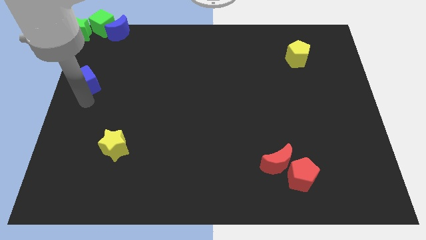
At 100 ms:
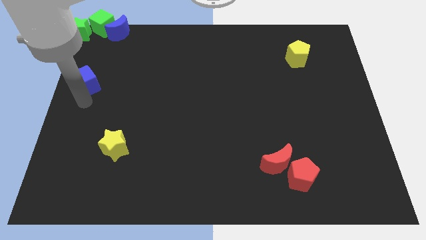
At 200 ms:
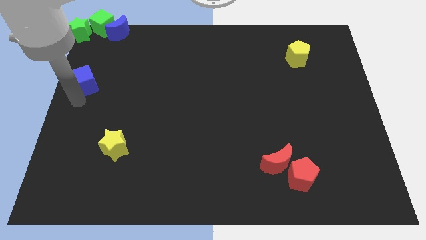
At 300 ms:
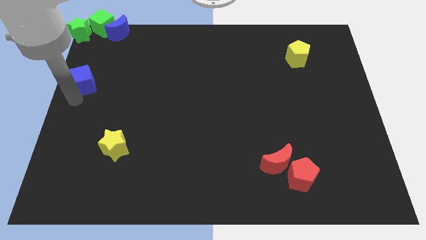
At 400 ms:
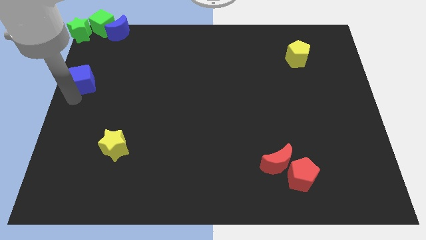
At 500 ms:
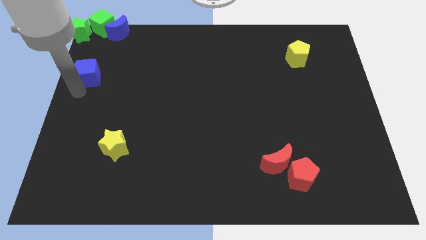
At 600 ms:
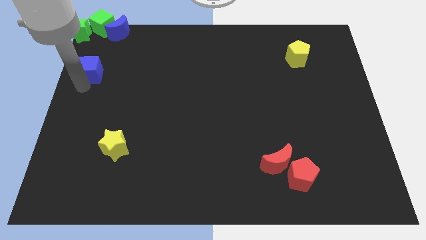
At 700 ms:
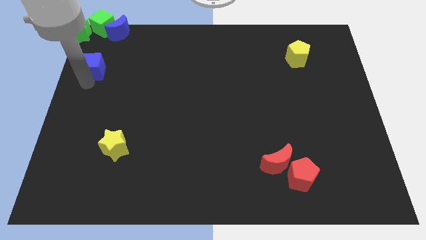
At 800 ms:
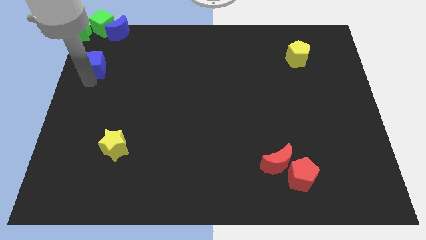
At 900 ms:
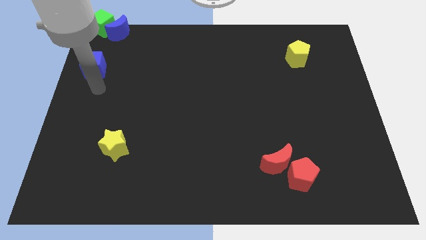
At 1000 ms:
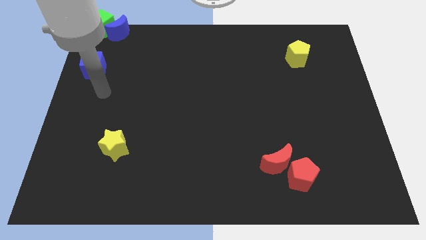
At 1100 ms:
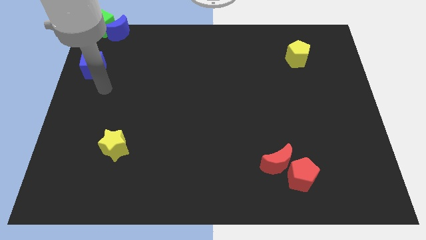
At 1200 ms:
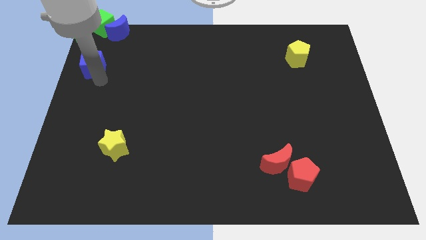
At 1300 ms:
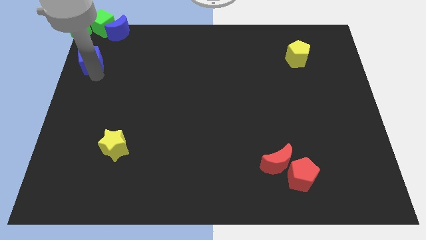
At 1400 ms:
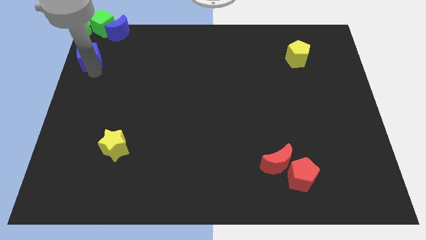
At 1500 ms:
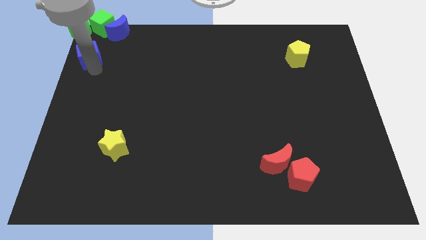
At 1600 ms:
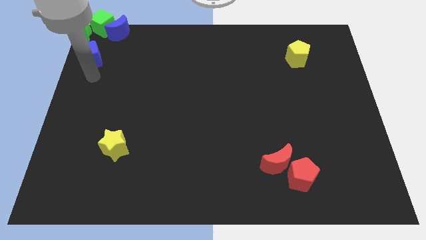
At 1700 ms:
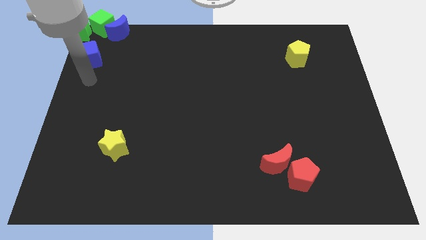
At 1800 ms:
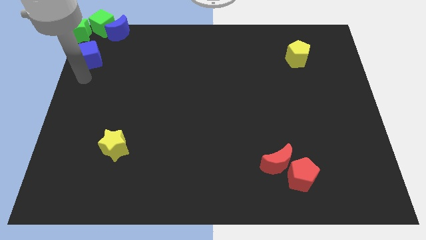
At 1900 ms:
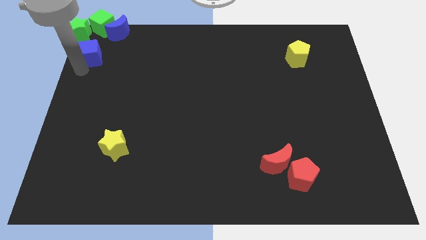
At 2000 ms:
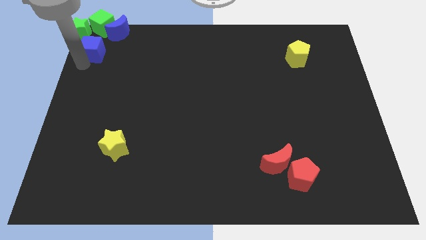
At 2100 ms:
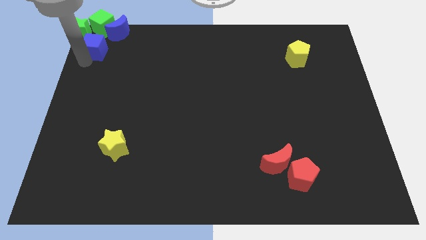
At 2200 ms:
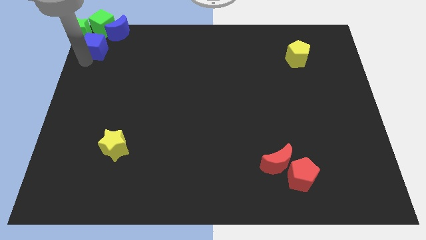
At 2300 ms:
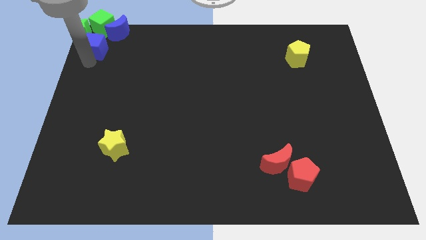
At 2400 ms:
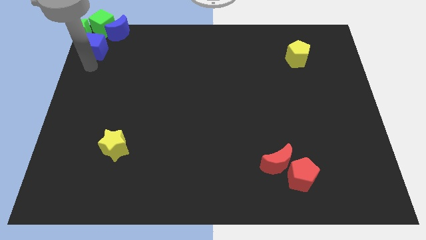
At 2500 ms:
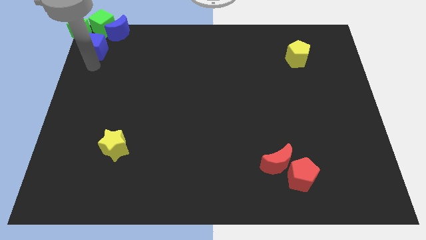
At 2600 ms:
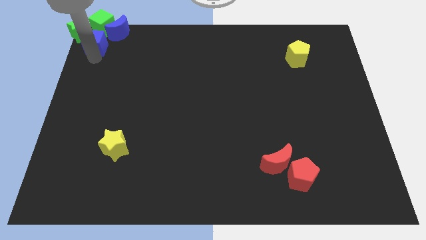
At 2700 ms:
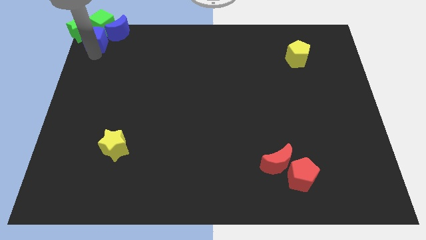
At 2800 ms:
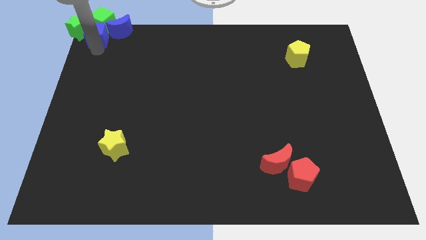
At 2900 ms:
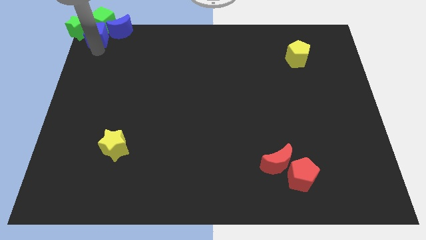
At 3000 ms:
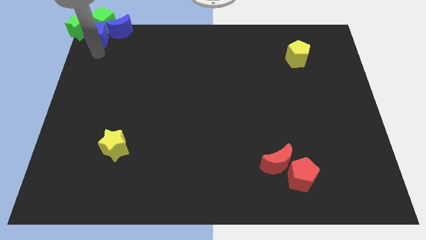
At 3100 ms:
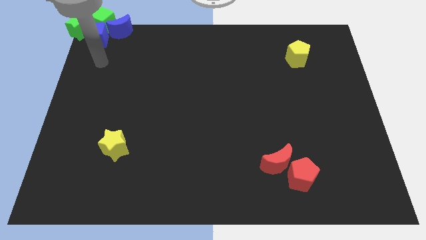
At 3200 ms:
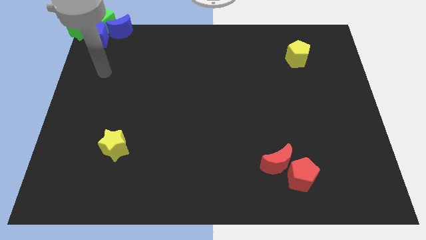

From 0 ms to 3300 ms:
push the blue cube into the green cube

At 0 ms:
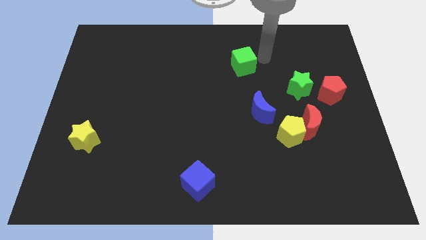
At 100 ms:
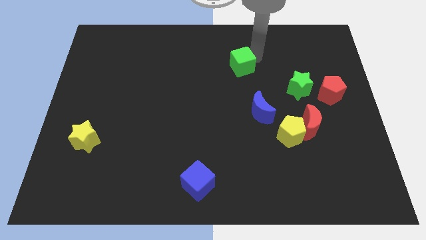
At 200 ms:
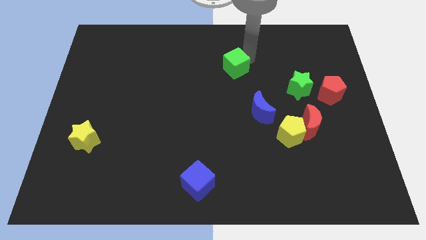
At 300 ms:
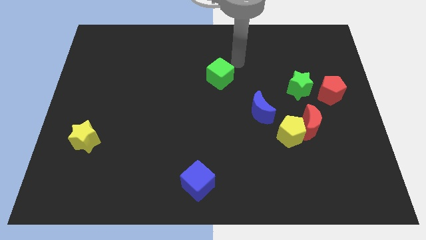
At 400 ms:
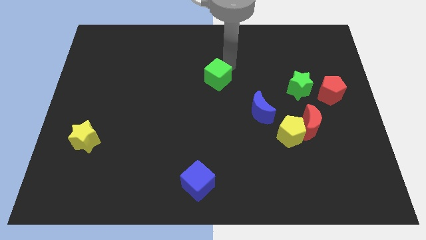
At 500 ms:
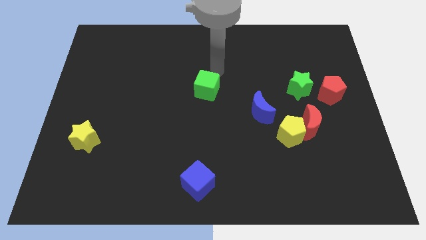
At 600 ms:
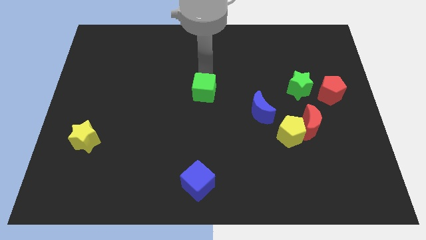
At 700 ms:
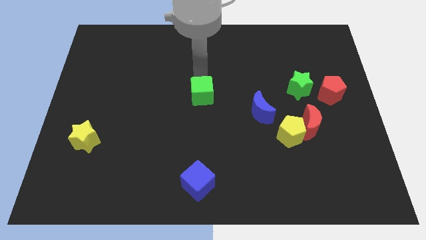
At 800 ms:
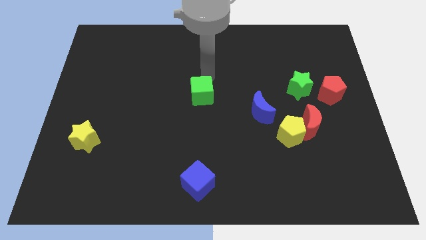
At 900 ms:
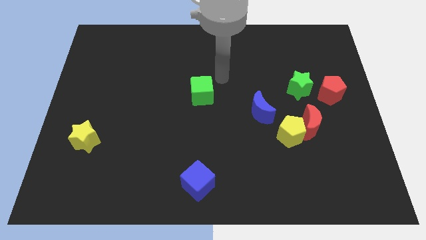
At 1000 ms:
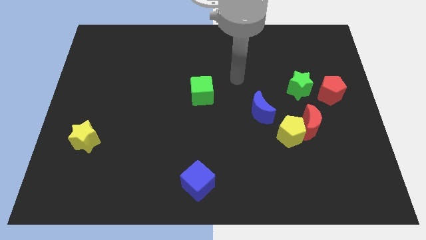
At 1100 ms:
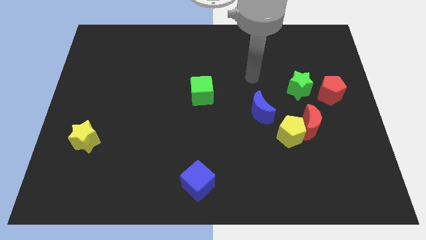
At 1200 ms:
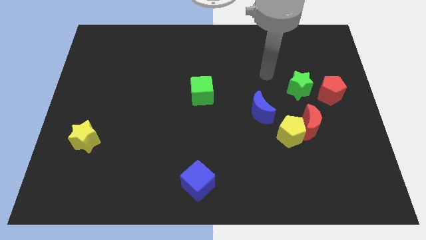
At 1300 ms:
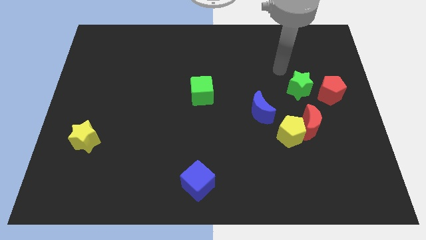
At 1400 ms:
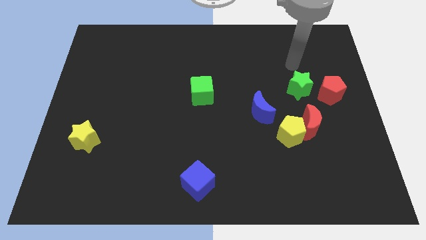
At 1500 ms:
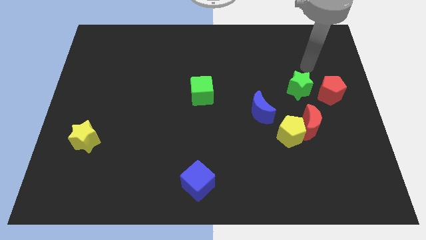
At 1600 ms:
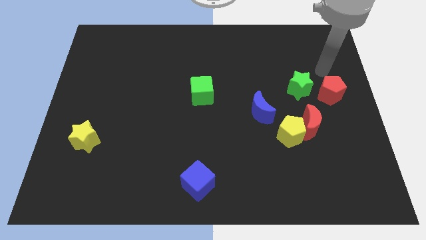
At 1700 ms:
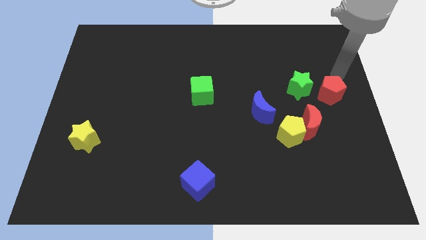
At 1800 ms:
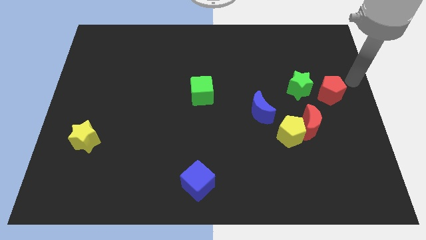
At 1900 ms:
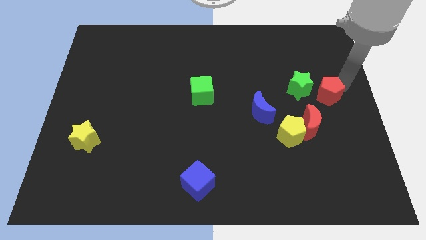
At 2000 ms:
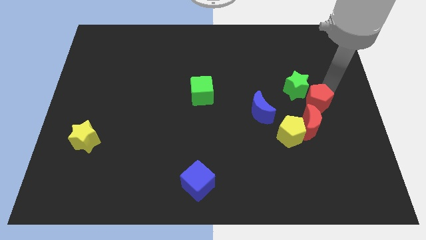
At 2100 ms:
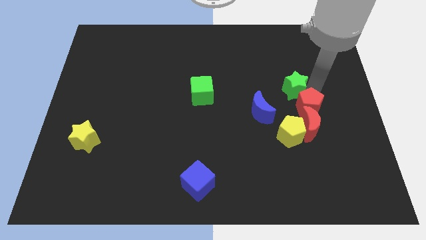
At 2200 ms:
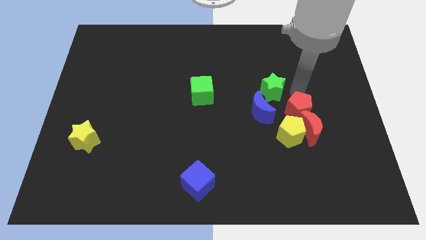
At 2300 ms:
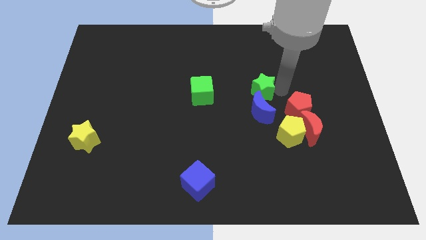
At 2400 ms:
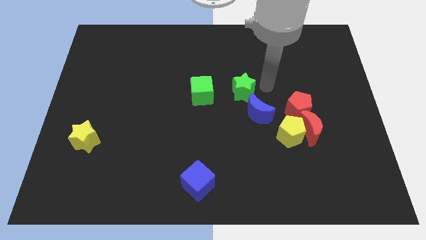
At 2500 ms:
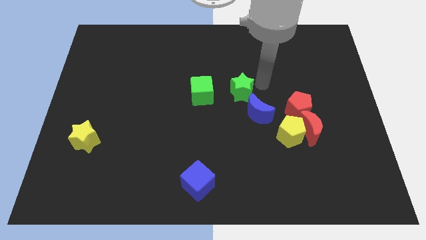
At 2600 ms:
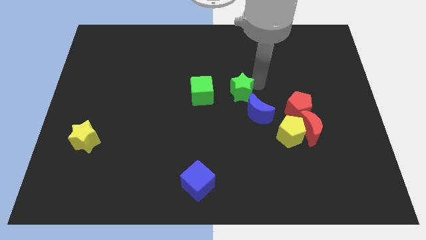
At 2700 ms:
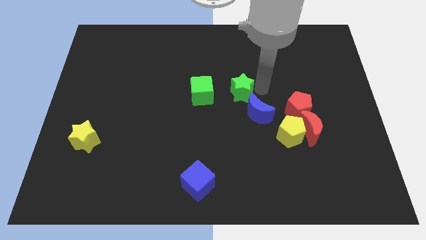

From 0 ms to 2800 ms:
move the green star towards the left of the board

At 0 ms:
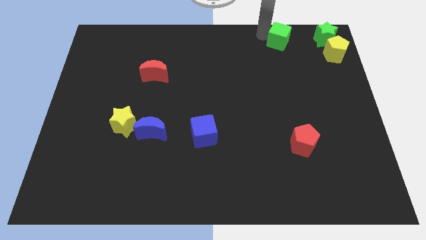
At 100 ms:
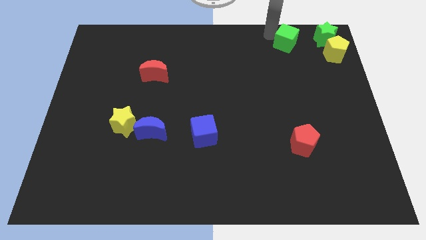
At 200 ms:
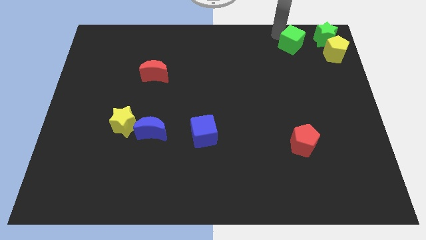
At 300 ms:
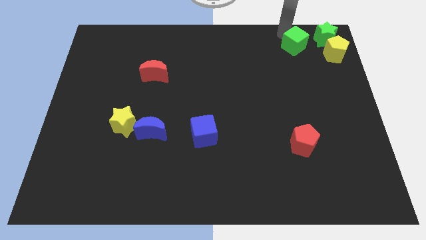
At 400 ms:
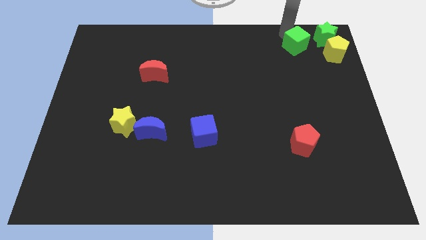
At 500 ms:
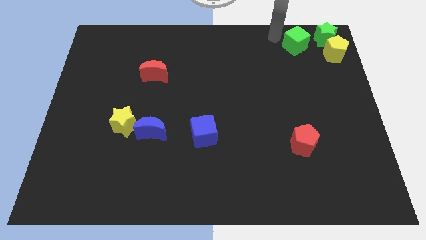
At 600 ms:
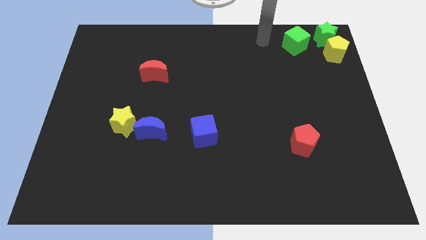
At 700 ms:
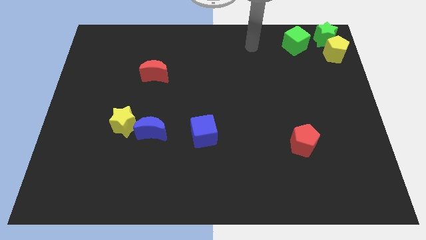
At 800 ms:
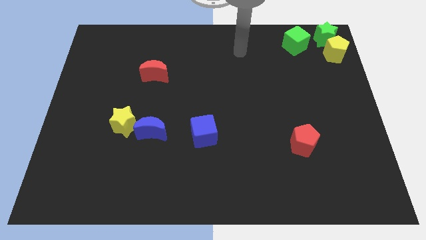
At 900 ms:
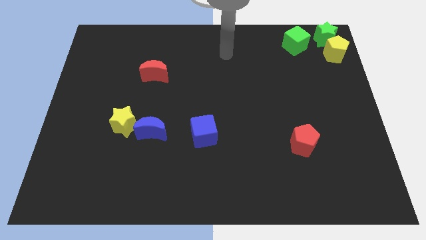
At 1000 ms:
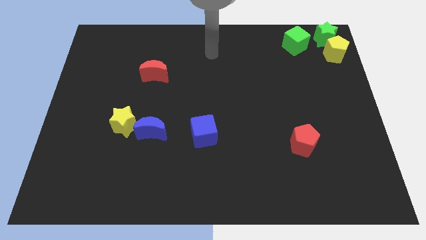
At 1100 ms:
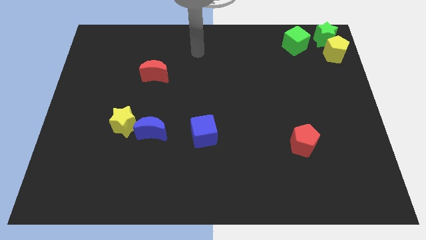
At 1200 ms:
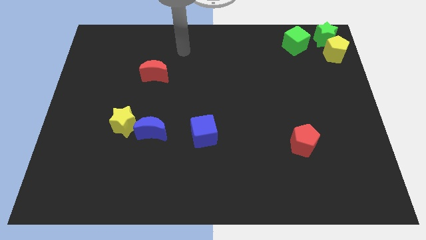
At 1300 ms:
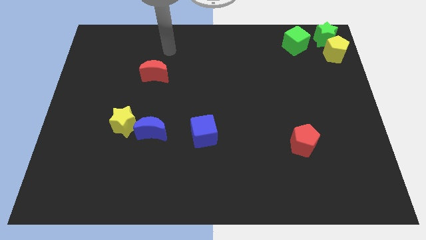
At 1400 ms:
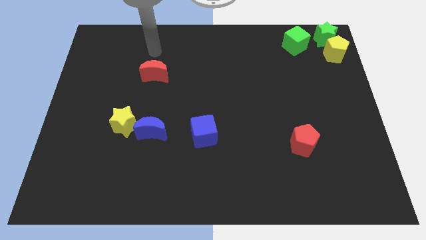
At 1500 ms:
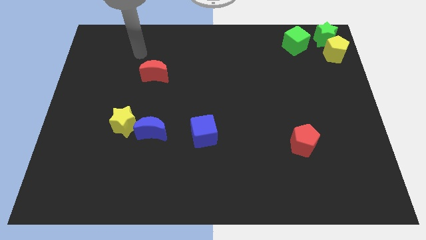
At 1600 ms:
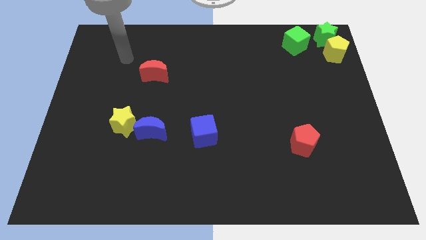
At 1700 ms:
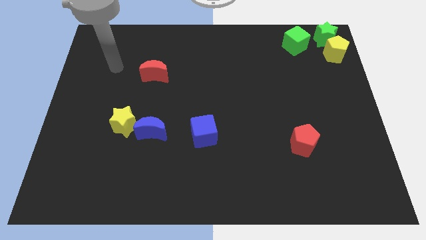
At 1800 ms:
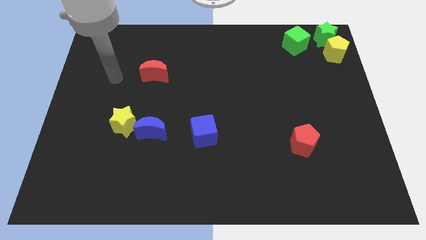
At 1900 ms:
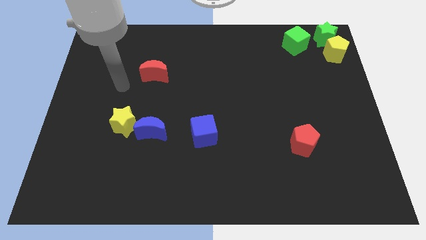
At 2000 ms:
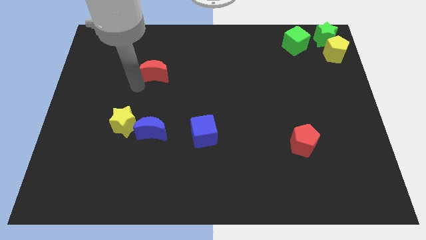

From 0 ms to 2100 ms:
slightly push the green cube close to the green star

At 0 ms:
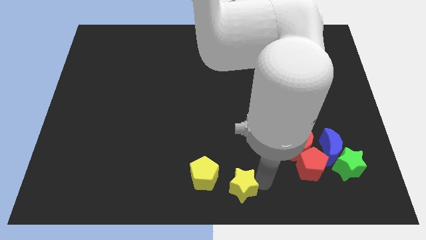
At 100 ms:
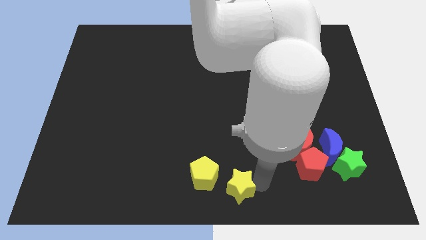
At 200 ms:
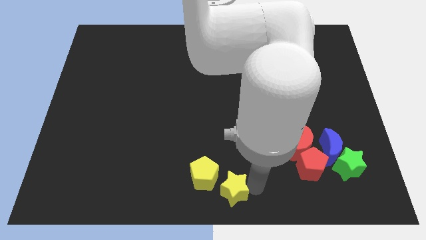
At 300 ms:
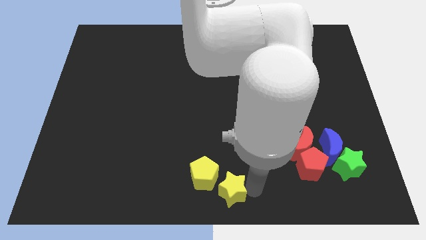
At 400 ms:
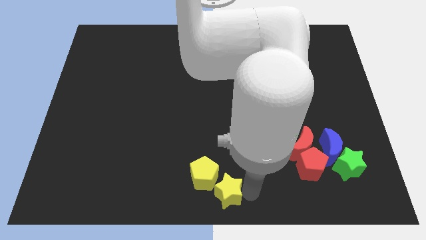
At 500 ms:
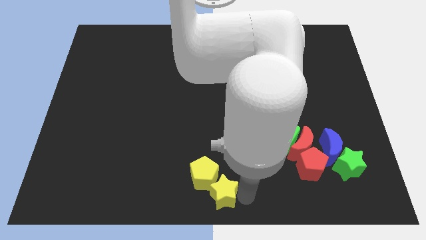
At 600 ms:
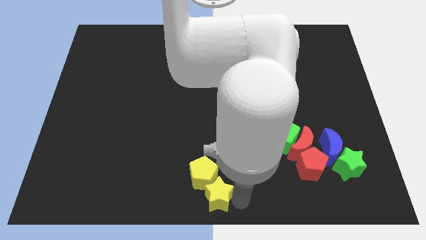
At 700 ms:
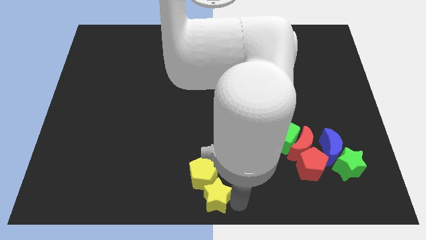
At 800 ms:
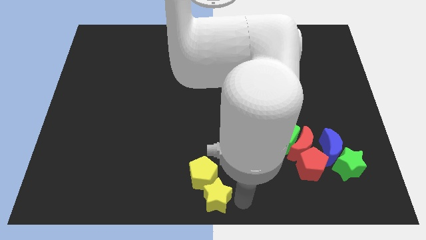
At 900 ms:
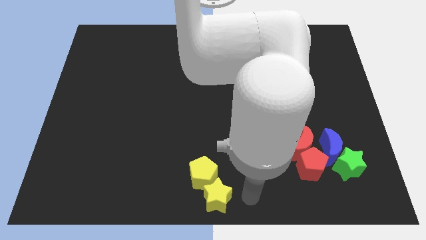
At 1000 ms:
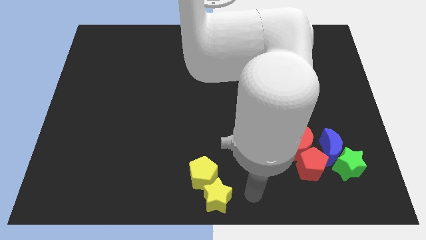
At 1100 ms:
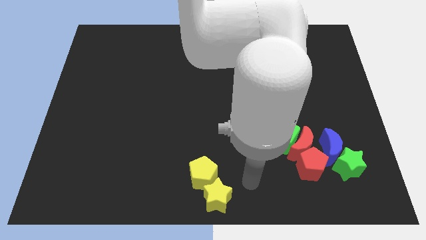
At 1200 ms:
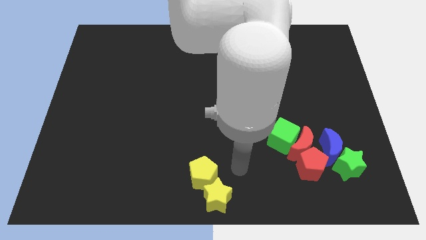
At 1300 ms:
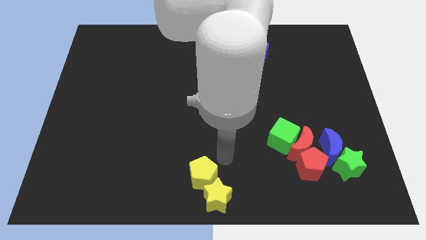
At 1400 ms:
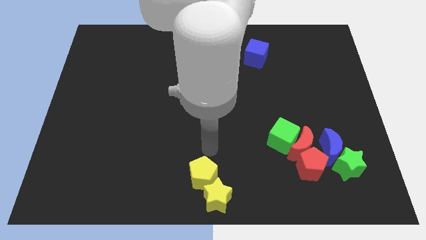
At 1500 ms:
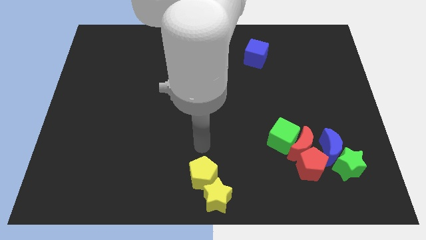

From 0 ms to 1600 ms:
move yellow star into yellow pentagon
